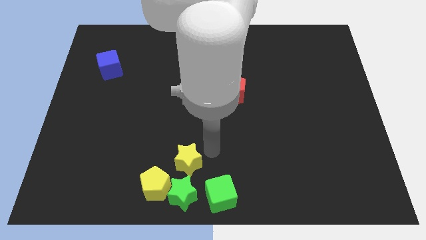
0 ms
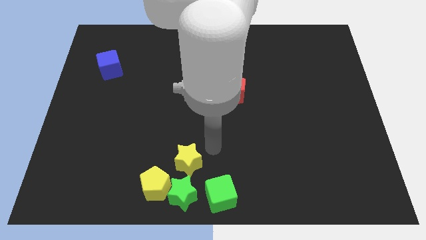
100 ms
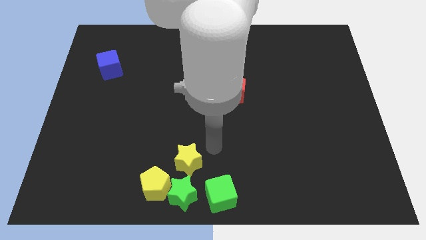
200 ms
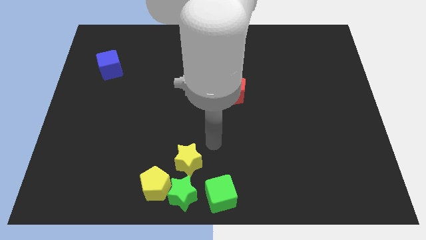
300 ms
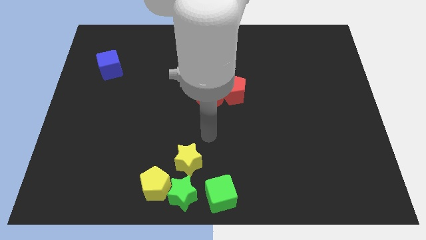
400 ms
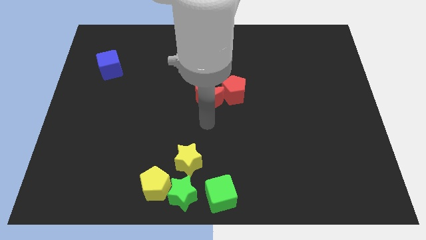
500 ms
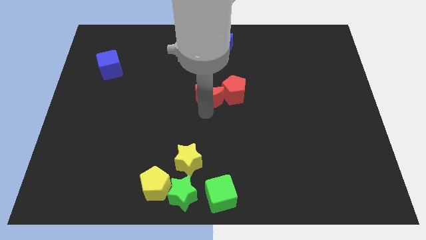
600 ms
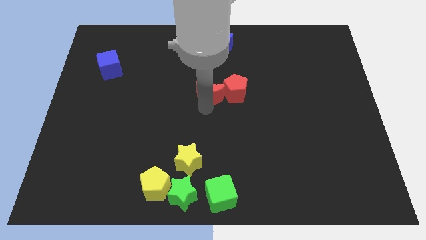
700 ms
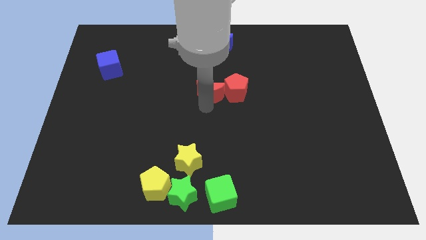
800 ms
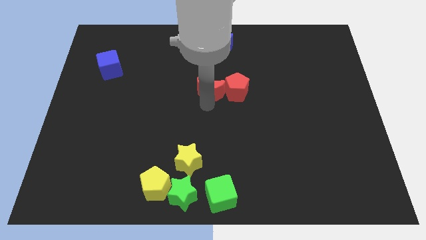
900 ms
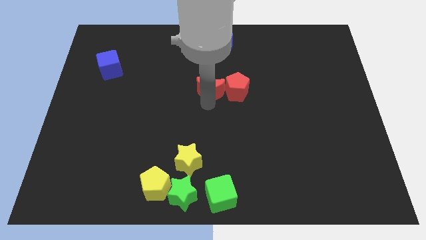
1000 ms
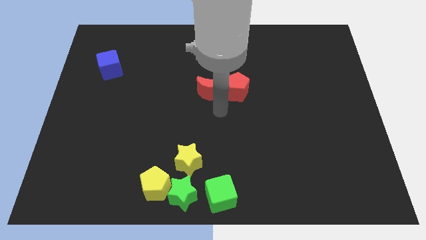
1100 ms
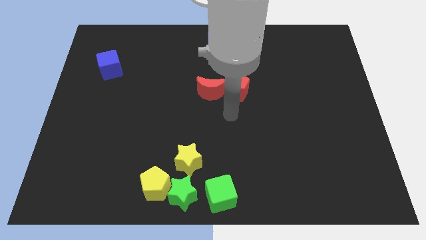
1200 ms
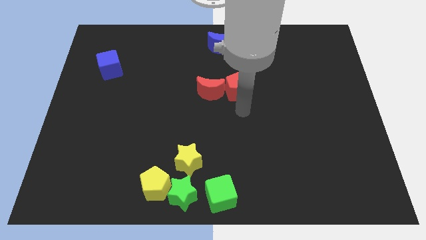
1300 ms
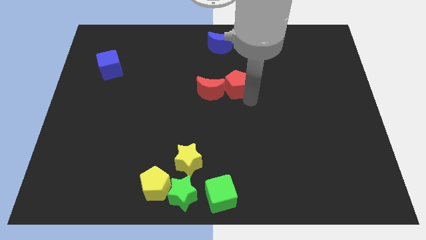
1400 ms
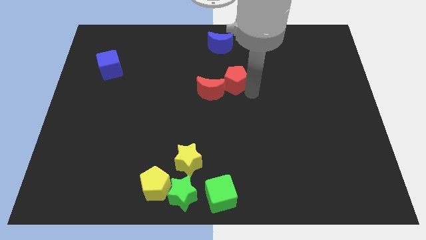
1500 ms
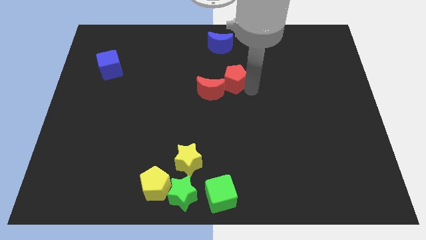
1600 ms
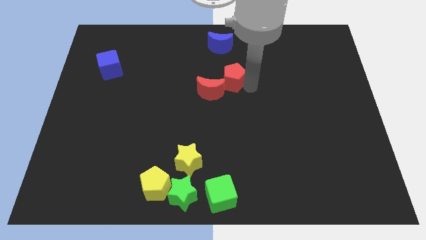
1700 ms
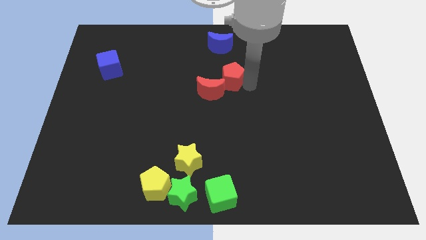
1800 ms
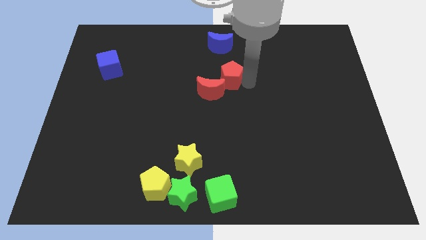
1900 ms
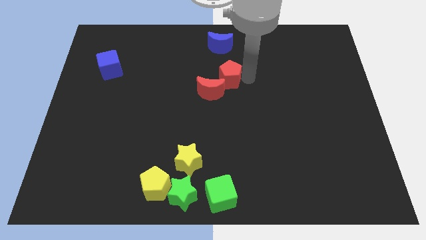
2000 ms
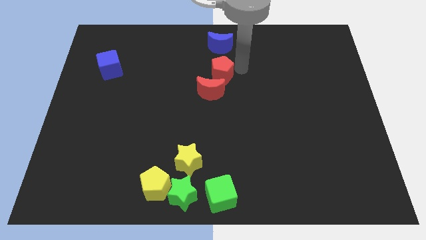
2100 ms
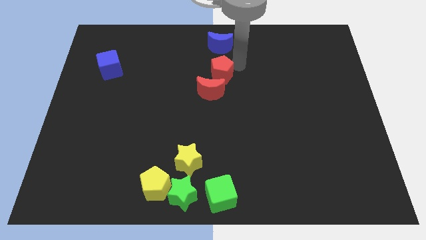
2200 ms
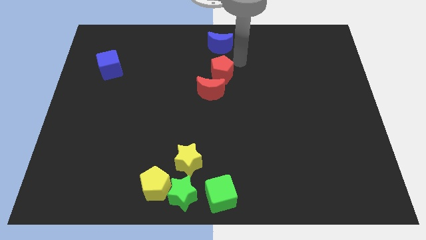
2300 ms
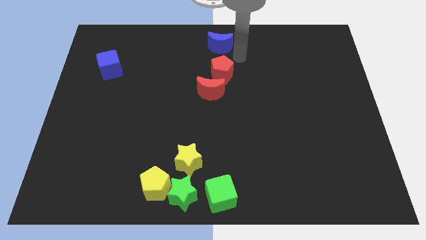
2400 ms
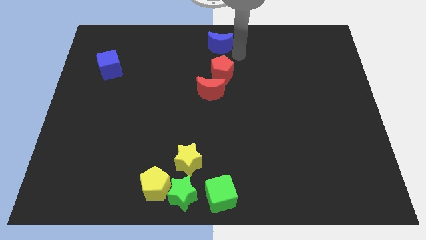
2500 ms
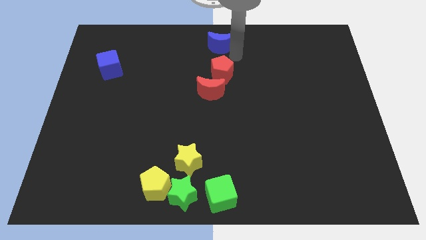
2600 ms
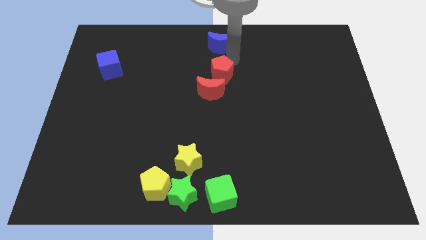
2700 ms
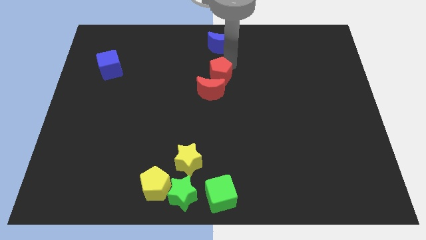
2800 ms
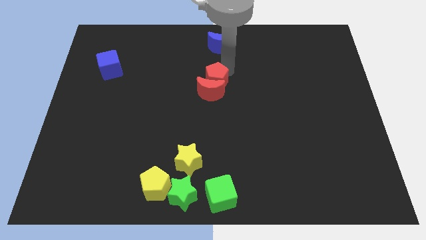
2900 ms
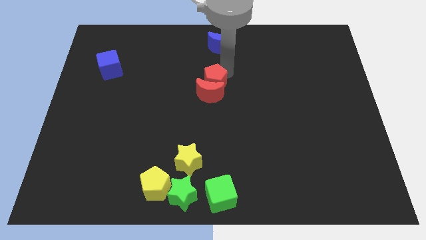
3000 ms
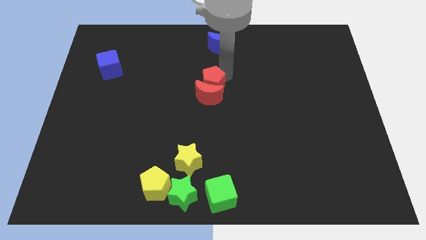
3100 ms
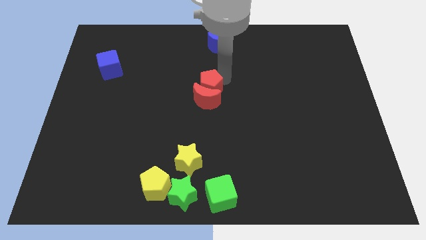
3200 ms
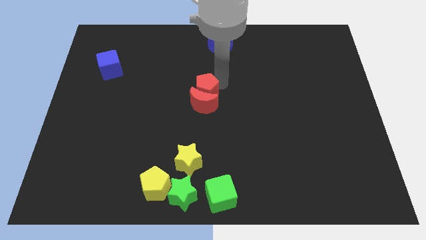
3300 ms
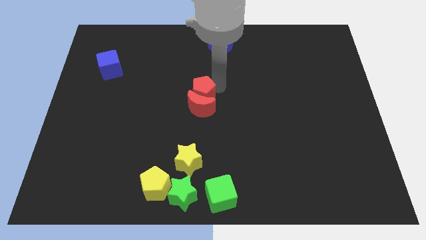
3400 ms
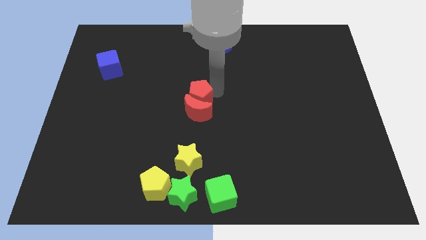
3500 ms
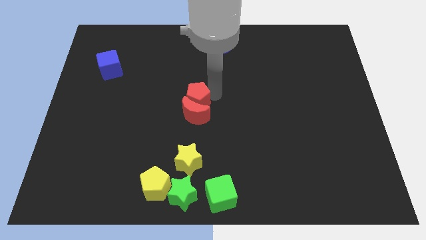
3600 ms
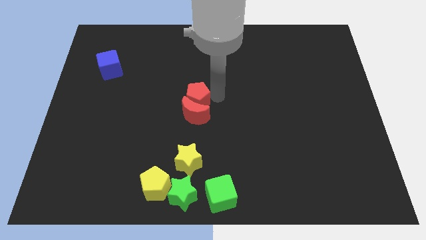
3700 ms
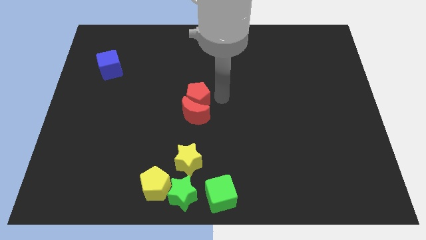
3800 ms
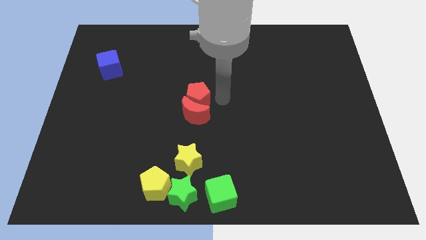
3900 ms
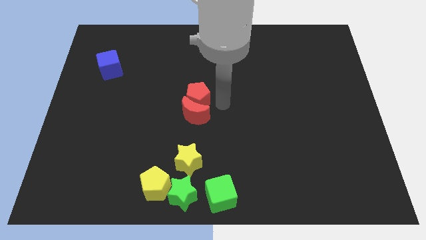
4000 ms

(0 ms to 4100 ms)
place the red blocks vertically above the top side of the yellow star

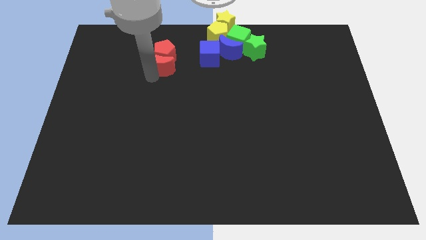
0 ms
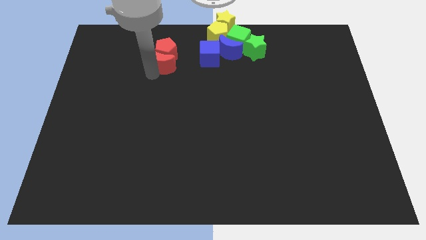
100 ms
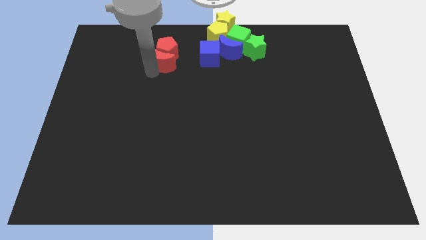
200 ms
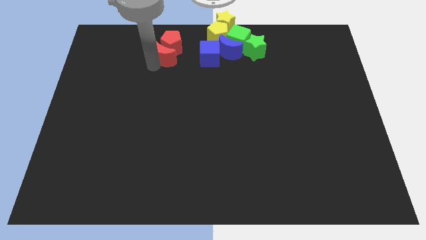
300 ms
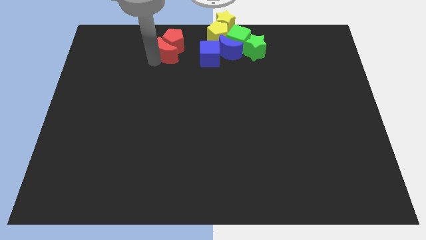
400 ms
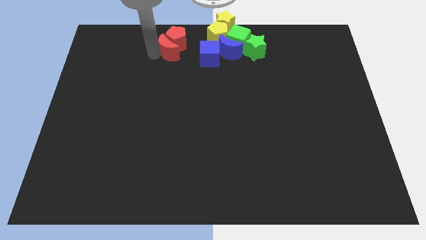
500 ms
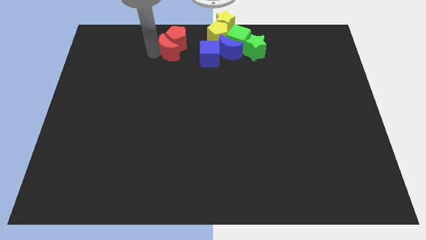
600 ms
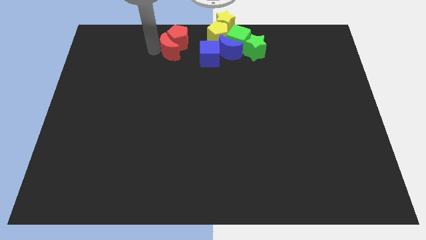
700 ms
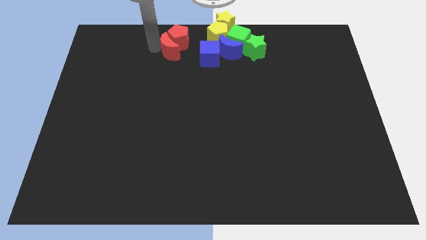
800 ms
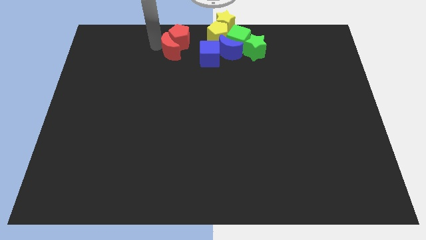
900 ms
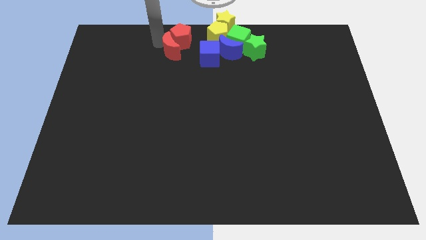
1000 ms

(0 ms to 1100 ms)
place the red blocks to the left of the group of blocks

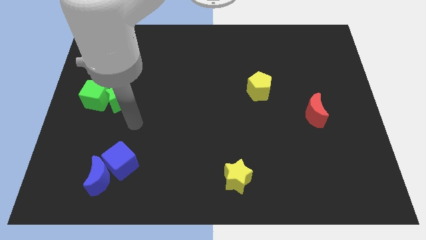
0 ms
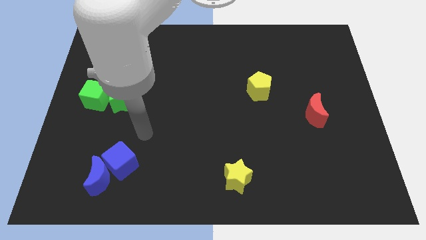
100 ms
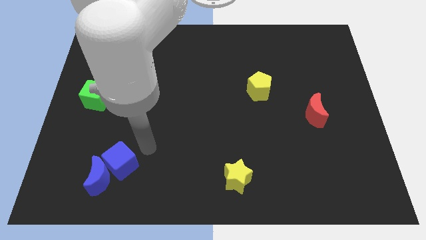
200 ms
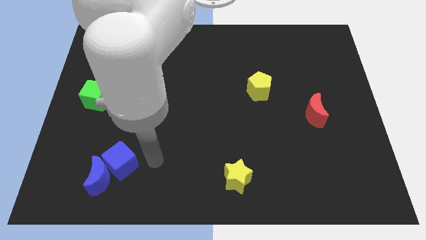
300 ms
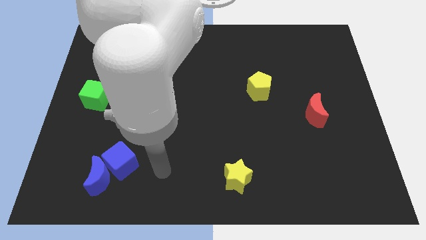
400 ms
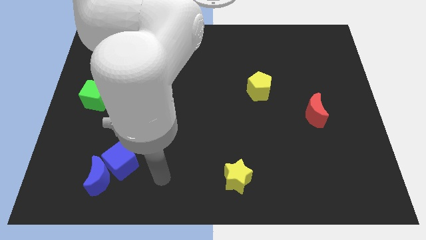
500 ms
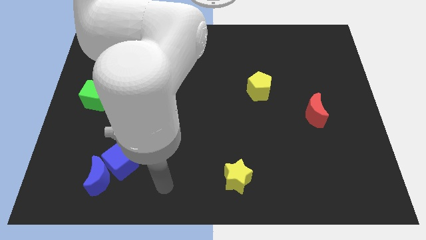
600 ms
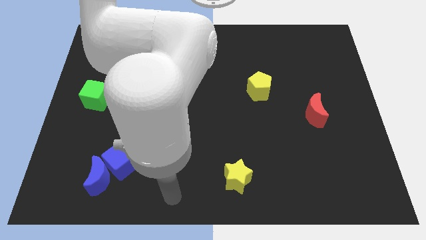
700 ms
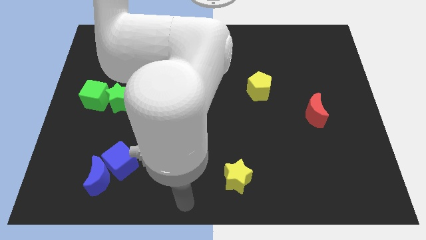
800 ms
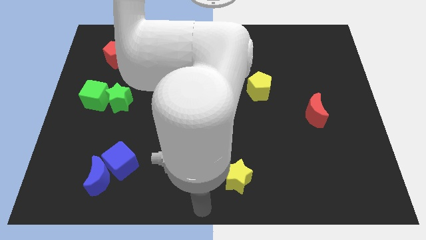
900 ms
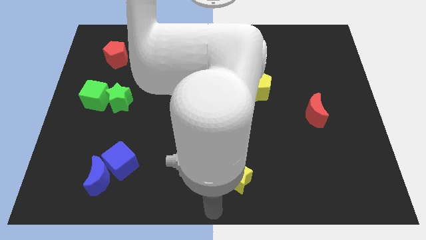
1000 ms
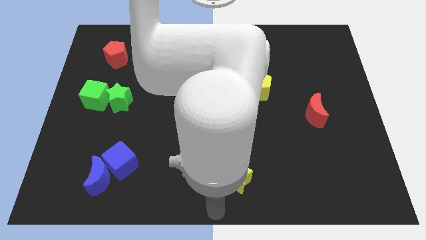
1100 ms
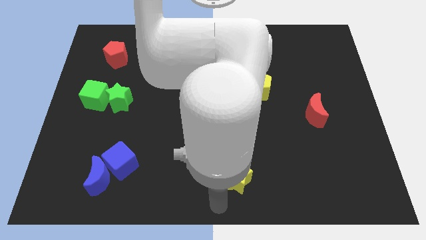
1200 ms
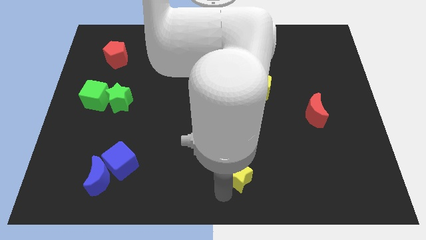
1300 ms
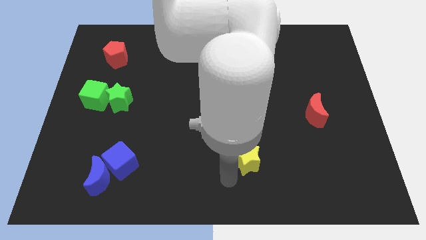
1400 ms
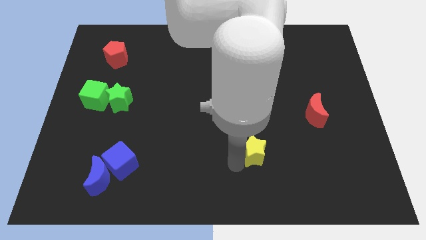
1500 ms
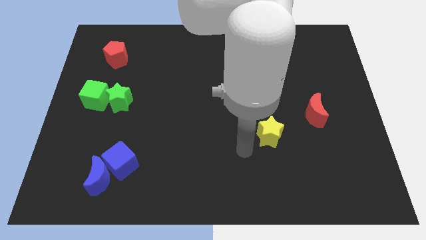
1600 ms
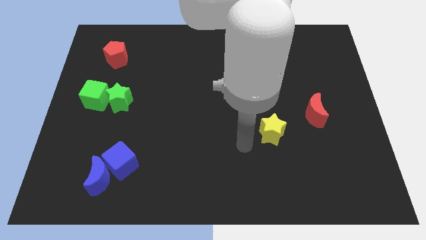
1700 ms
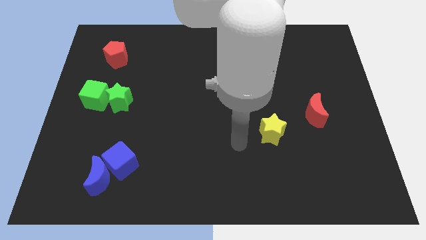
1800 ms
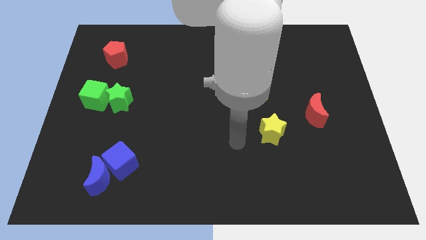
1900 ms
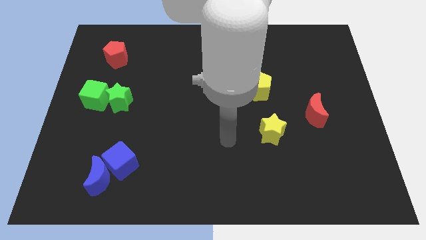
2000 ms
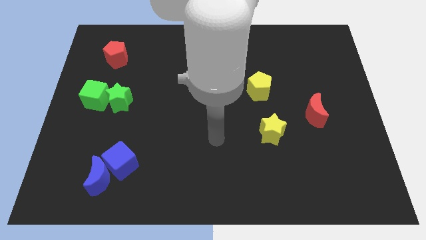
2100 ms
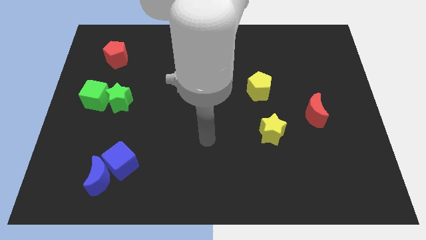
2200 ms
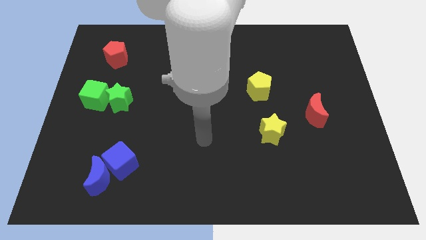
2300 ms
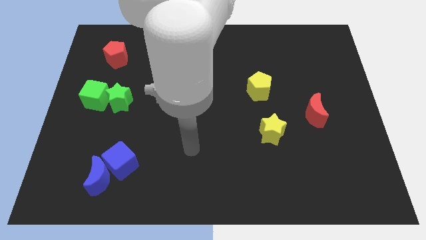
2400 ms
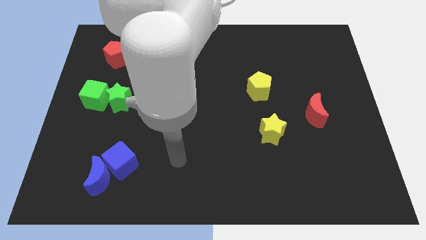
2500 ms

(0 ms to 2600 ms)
push the yellow star towards to the red moon

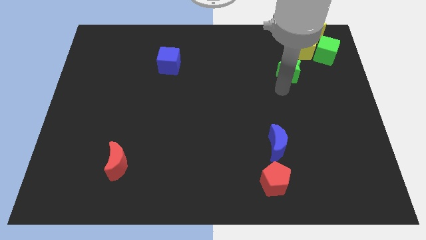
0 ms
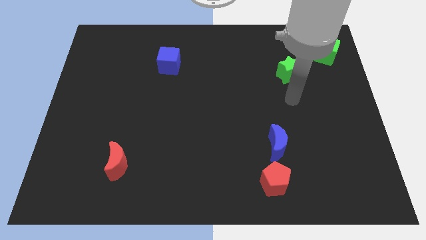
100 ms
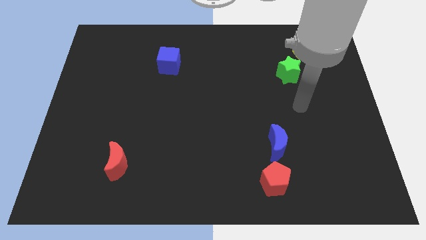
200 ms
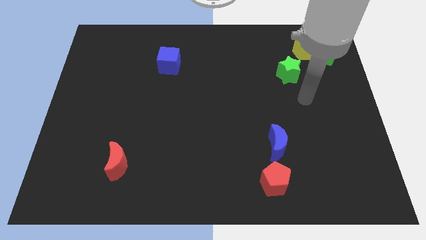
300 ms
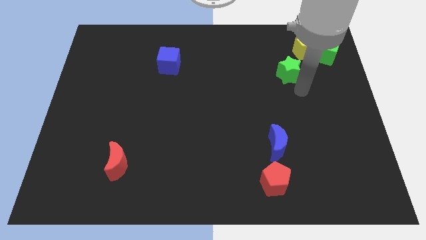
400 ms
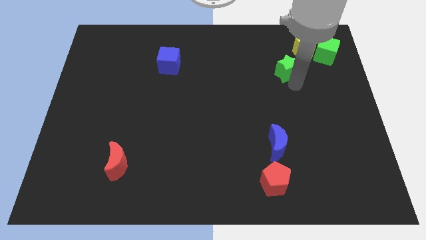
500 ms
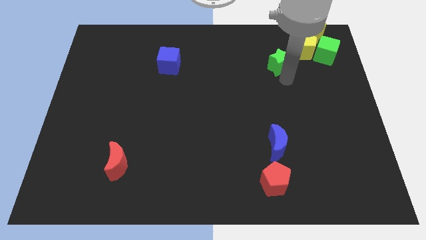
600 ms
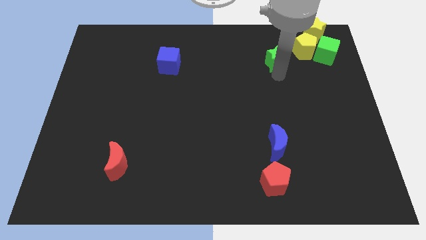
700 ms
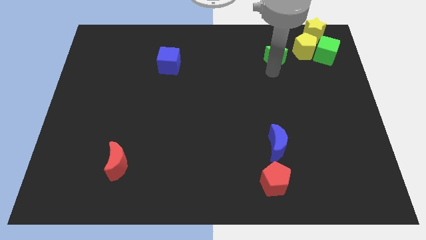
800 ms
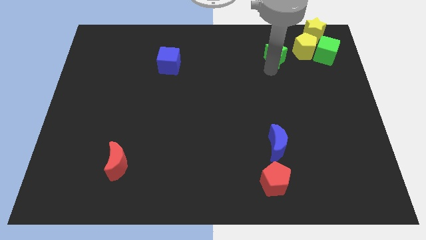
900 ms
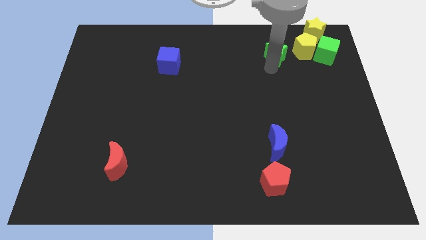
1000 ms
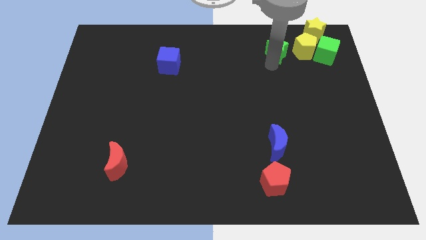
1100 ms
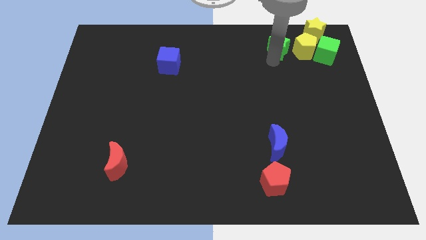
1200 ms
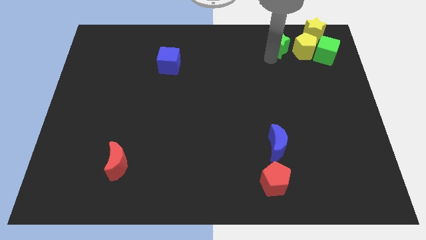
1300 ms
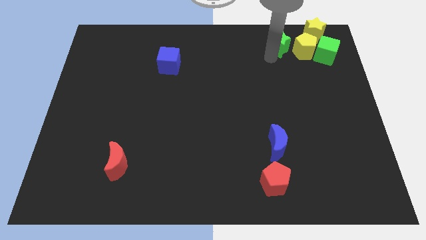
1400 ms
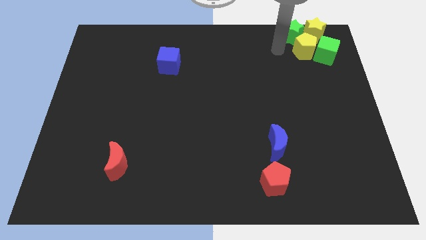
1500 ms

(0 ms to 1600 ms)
place green star to the left side of the yellow pentagon
